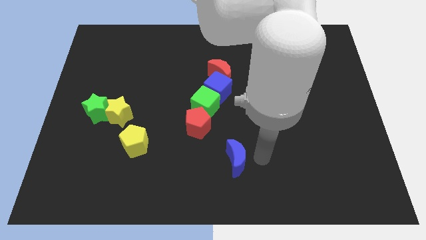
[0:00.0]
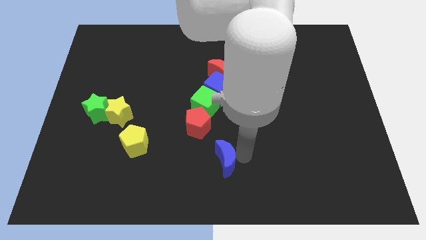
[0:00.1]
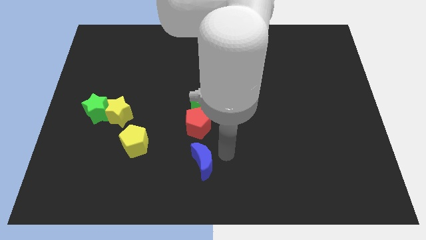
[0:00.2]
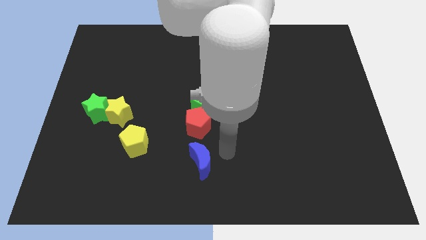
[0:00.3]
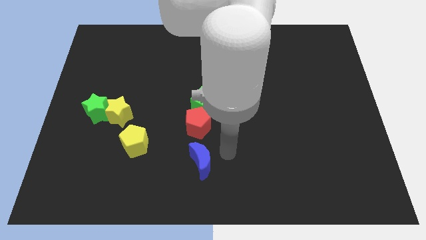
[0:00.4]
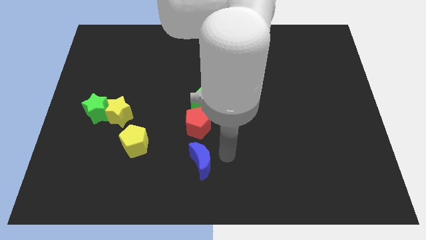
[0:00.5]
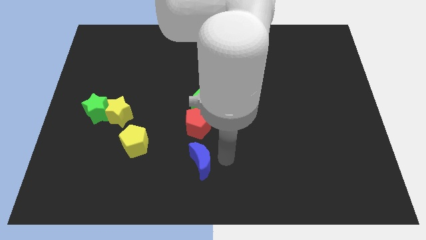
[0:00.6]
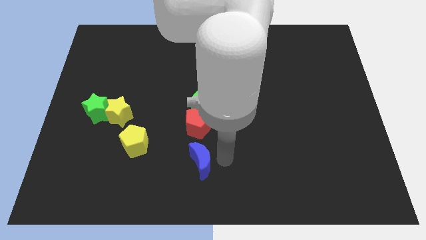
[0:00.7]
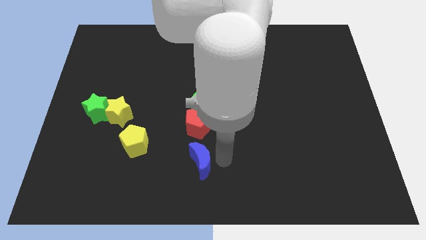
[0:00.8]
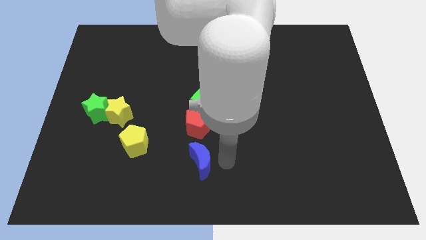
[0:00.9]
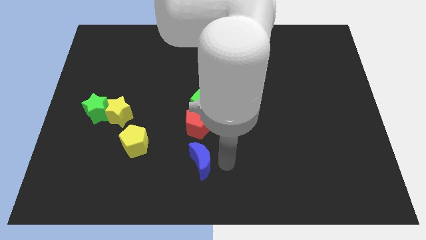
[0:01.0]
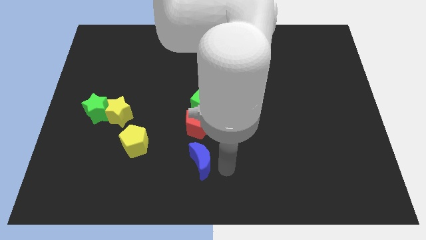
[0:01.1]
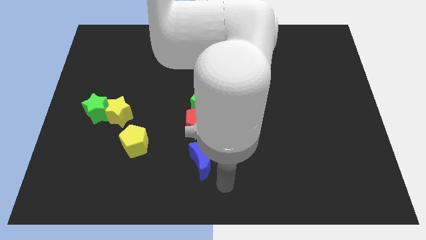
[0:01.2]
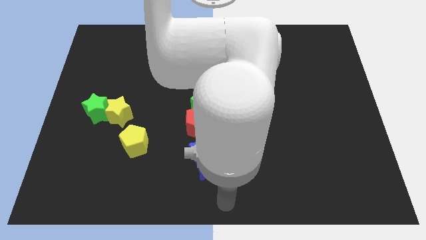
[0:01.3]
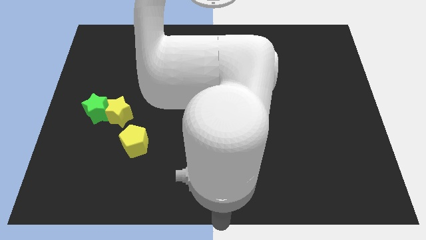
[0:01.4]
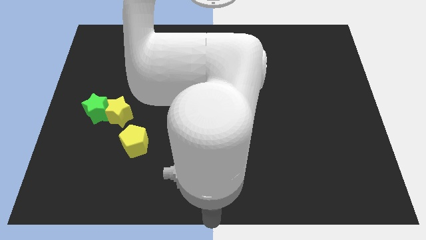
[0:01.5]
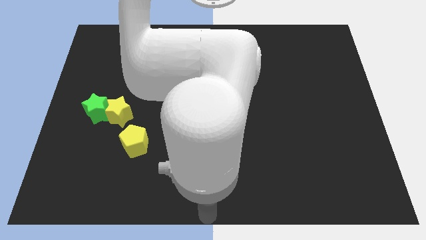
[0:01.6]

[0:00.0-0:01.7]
move the blue crescent to the bottom of the red pentagon

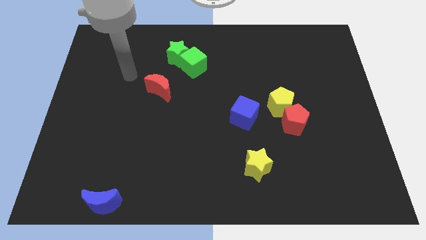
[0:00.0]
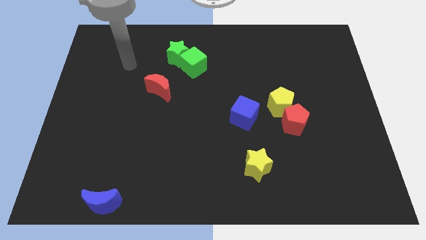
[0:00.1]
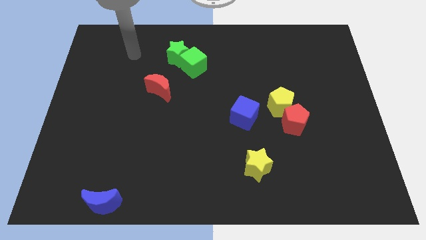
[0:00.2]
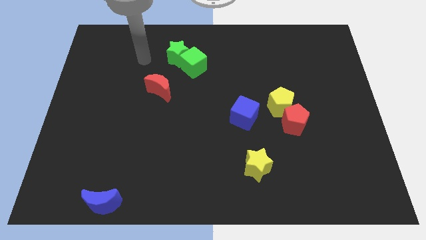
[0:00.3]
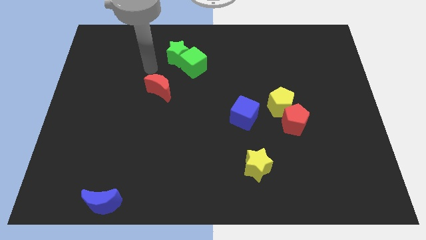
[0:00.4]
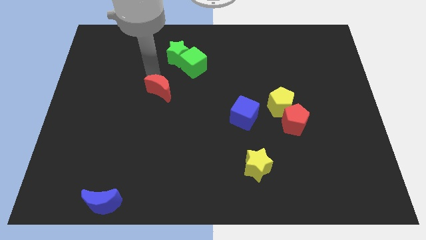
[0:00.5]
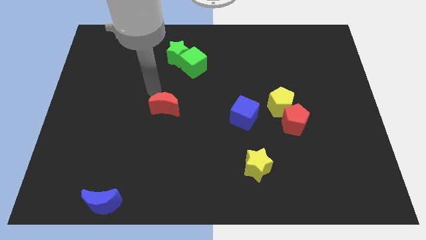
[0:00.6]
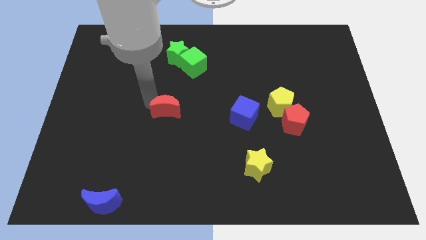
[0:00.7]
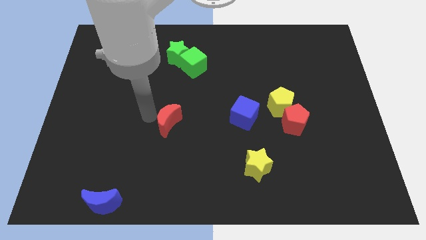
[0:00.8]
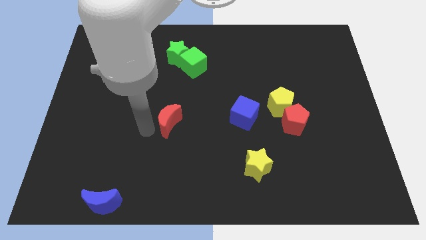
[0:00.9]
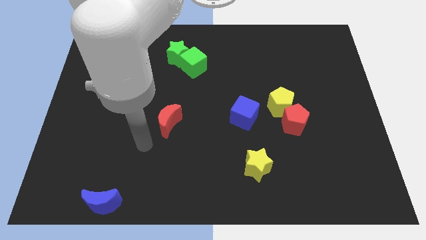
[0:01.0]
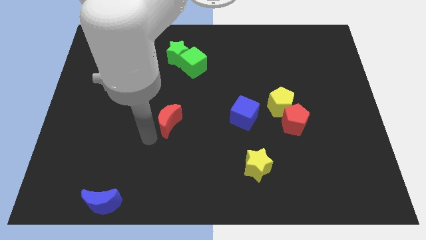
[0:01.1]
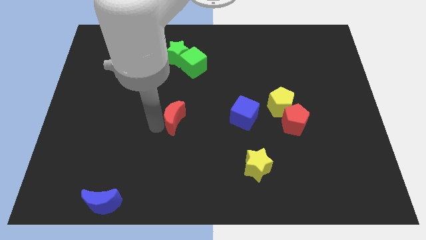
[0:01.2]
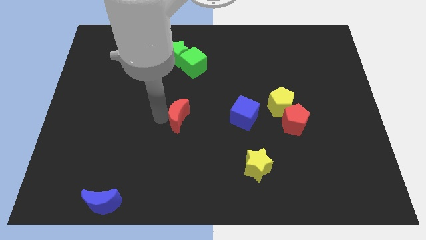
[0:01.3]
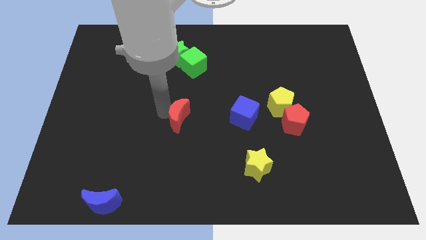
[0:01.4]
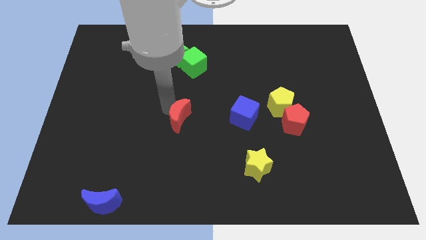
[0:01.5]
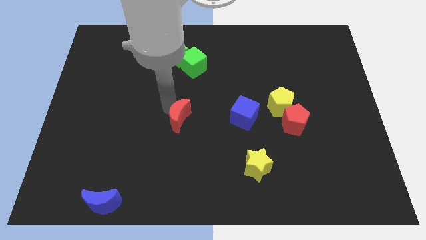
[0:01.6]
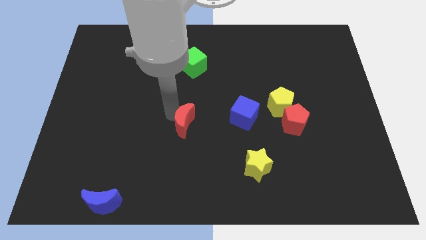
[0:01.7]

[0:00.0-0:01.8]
move red moon slightly towards right side of the board

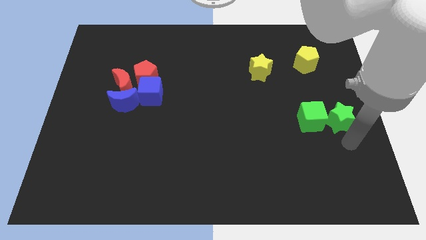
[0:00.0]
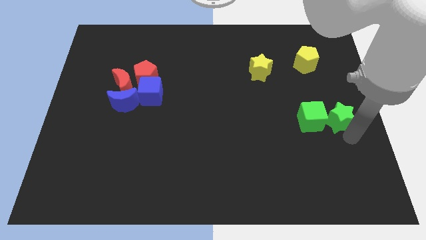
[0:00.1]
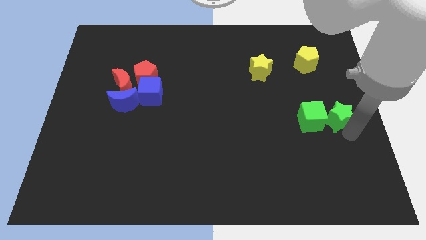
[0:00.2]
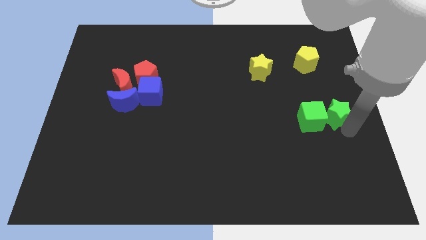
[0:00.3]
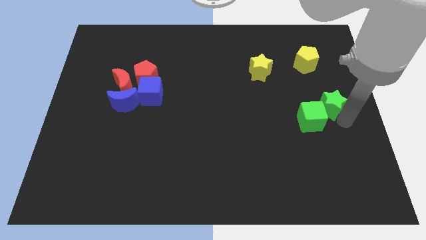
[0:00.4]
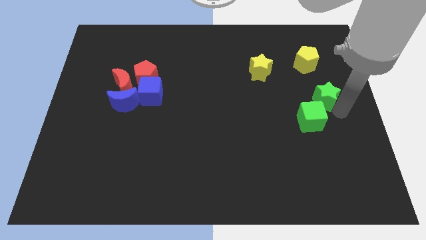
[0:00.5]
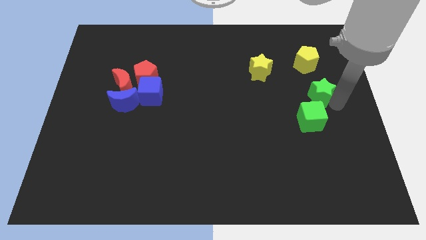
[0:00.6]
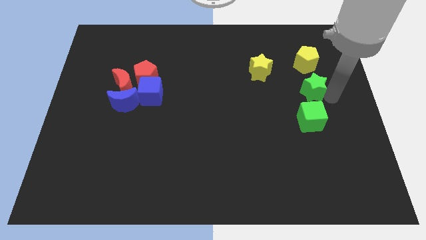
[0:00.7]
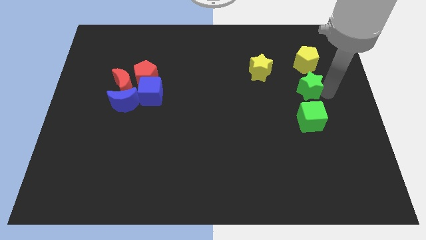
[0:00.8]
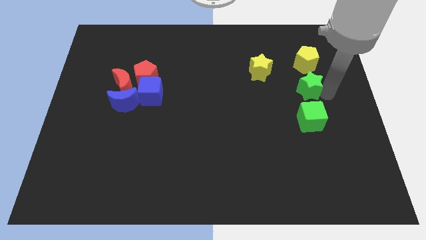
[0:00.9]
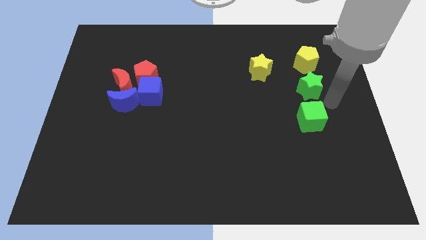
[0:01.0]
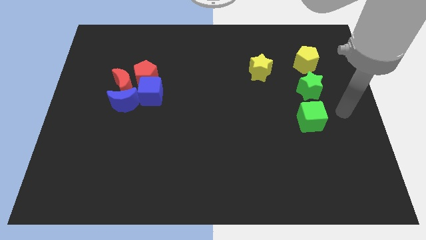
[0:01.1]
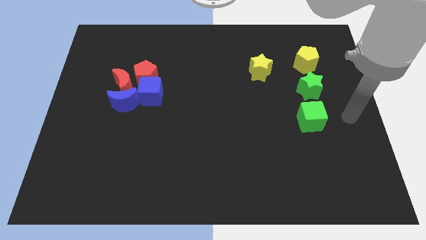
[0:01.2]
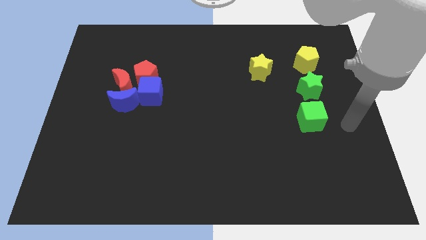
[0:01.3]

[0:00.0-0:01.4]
place the green star vertically above the green cube

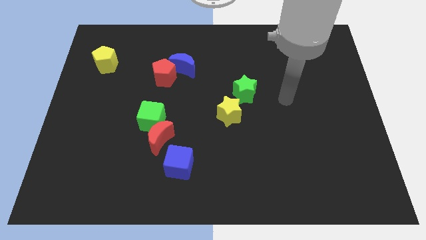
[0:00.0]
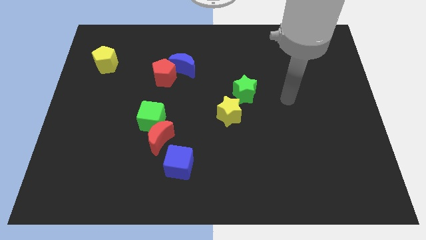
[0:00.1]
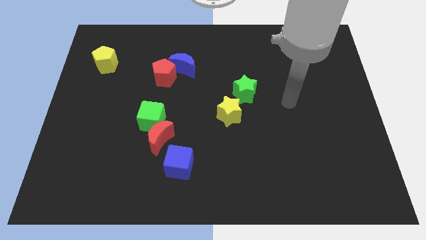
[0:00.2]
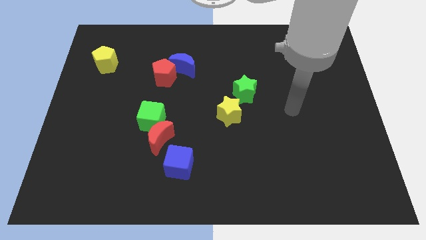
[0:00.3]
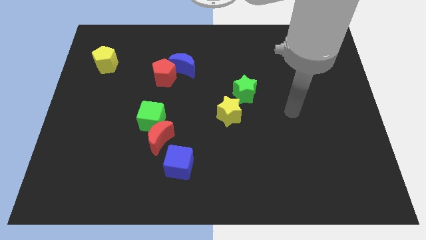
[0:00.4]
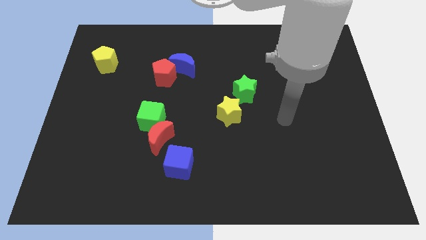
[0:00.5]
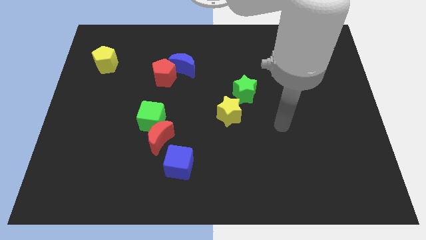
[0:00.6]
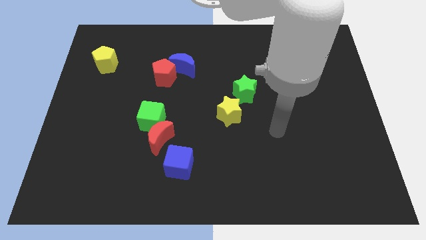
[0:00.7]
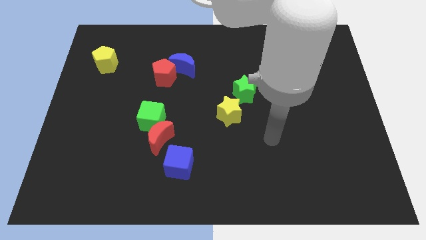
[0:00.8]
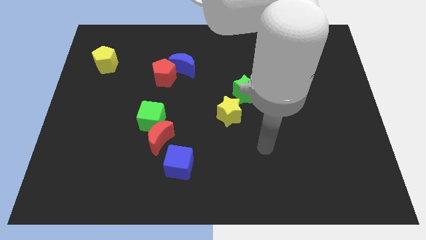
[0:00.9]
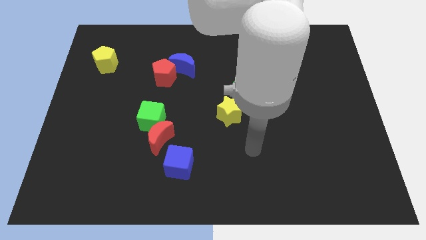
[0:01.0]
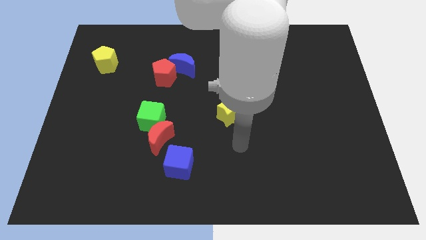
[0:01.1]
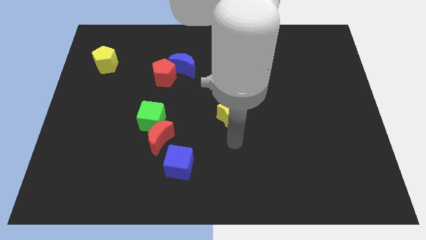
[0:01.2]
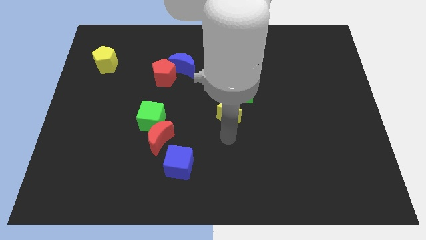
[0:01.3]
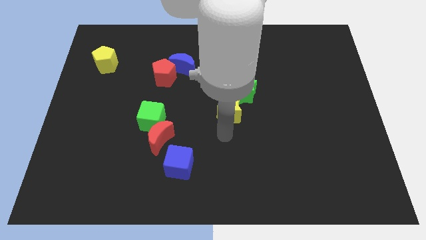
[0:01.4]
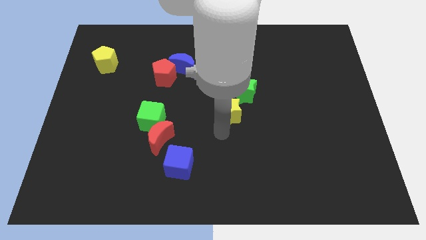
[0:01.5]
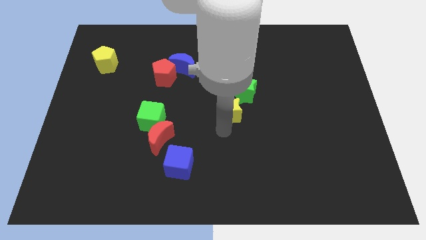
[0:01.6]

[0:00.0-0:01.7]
move your arm to the bottom of the yellow star

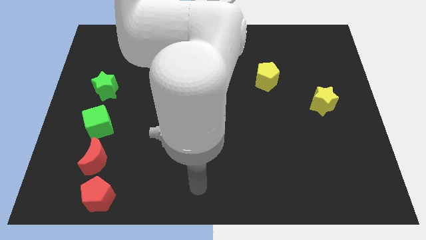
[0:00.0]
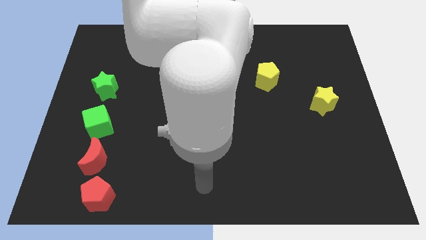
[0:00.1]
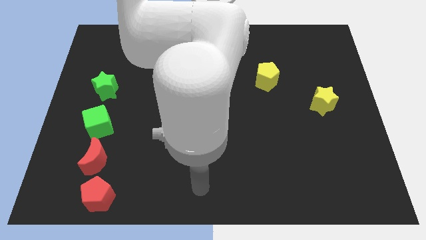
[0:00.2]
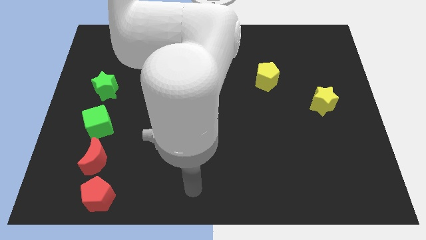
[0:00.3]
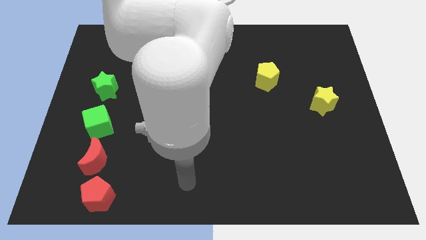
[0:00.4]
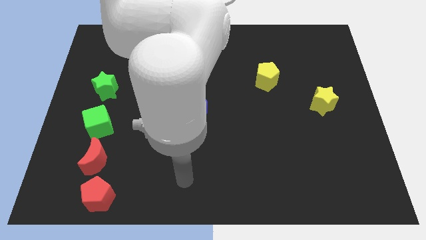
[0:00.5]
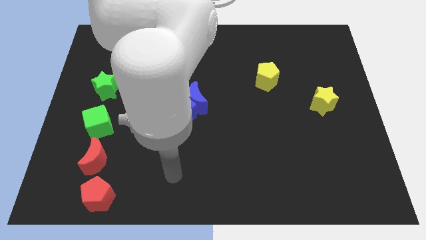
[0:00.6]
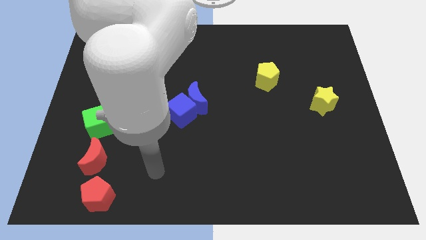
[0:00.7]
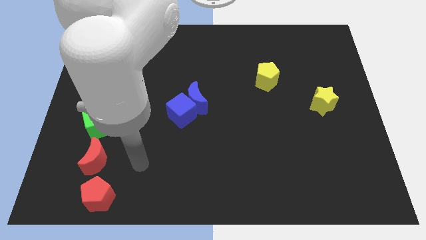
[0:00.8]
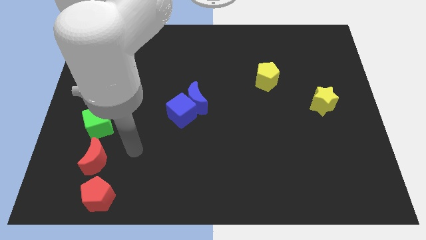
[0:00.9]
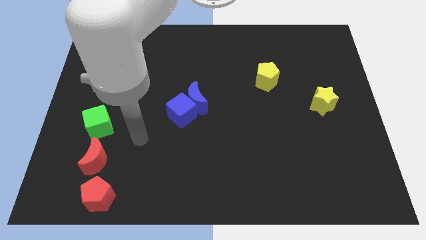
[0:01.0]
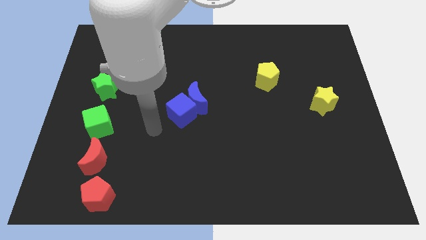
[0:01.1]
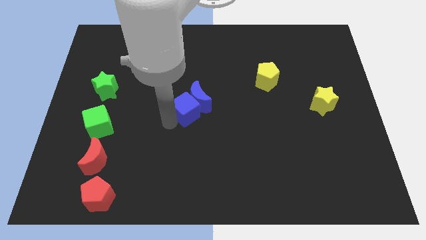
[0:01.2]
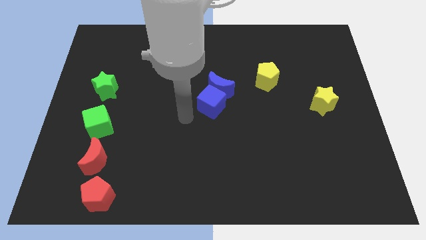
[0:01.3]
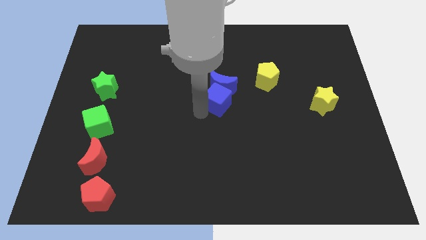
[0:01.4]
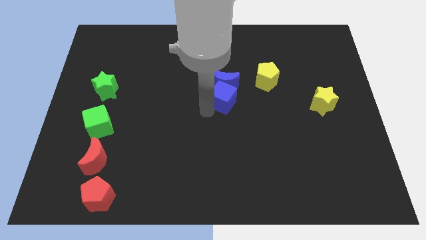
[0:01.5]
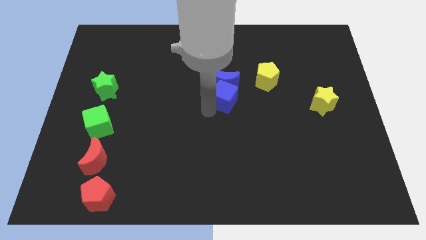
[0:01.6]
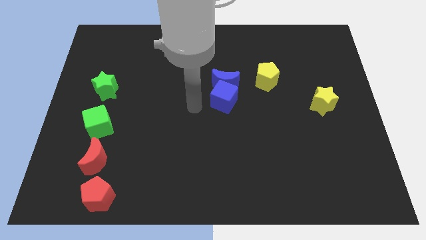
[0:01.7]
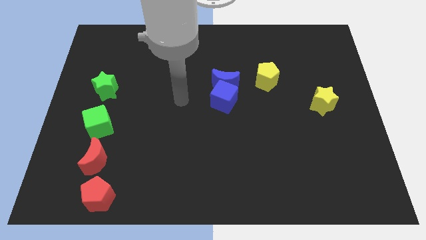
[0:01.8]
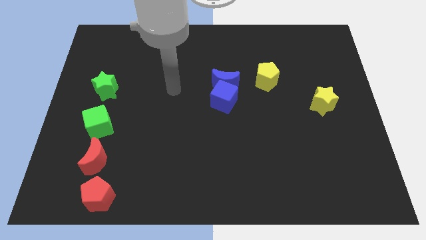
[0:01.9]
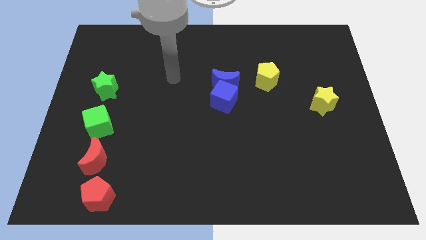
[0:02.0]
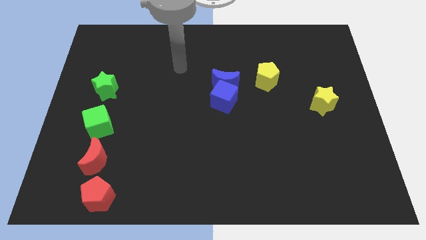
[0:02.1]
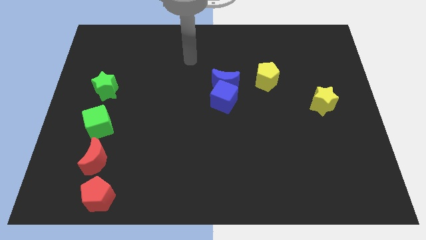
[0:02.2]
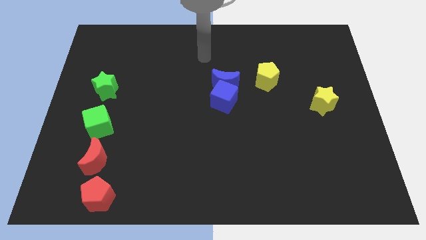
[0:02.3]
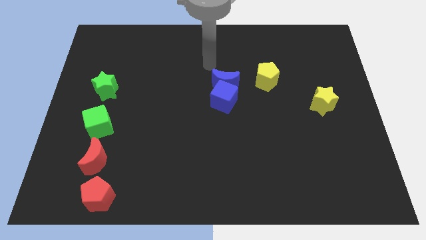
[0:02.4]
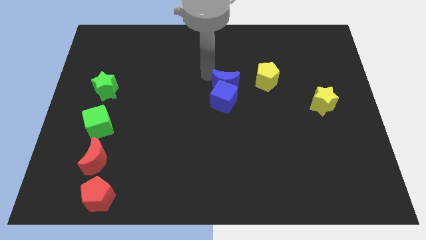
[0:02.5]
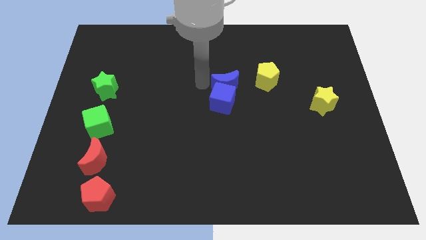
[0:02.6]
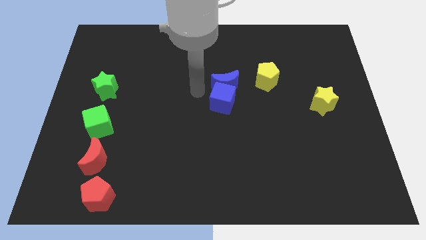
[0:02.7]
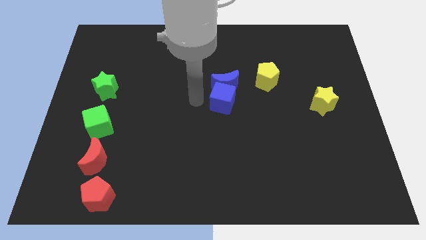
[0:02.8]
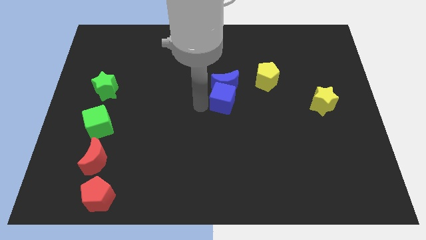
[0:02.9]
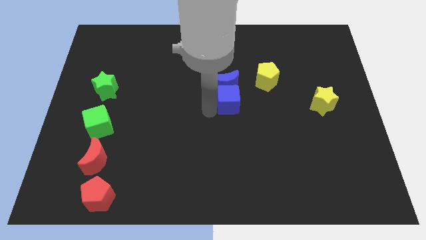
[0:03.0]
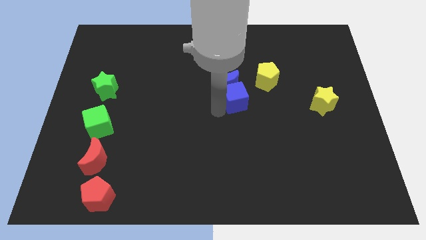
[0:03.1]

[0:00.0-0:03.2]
slide blue blocks to the right side of the board
